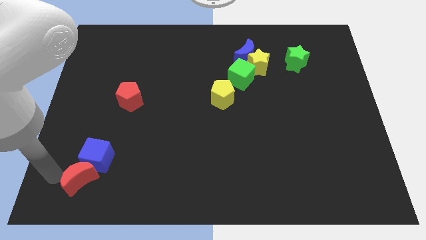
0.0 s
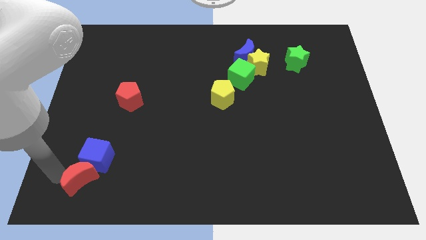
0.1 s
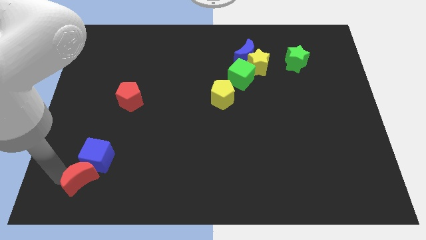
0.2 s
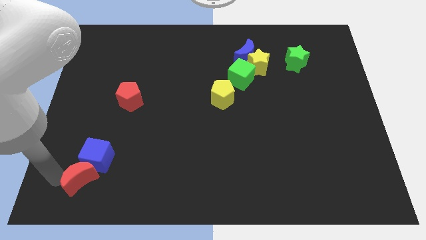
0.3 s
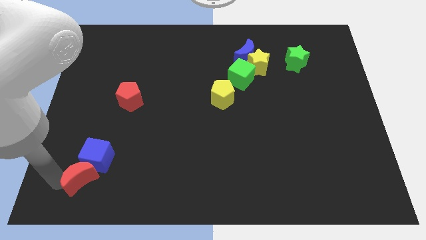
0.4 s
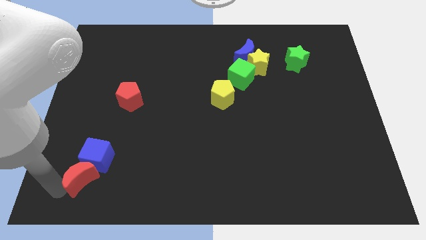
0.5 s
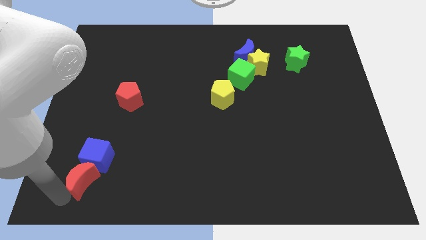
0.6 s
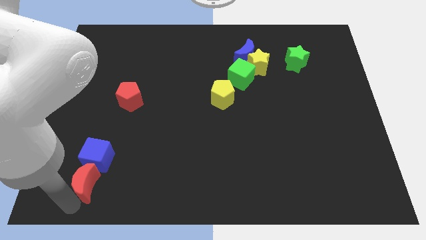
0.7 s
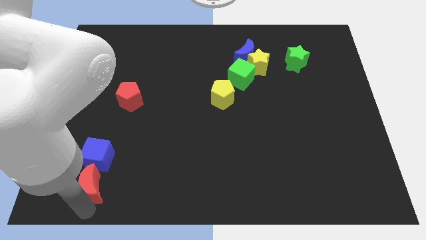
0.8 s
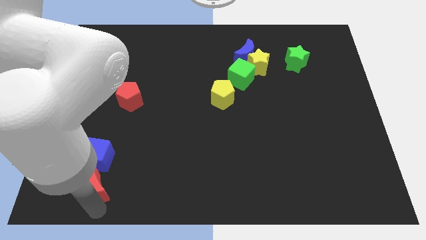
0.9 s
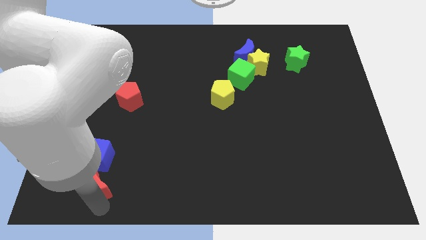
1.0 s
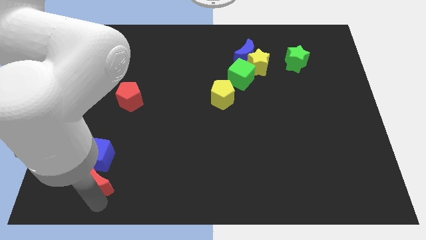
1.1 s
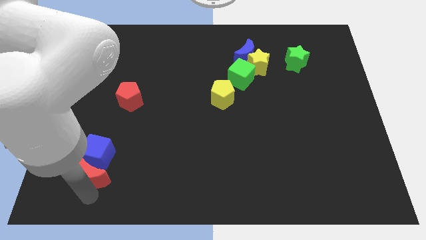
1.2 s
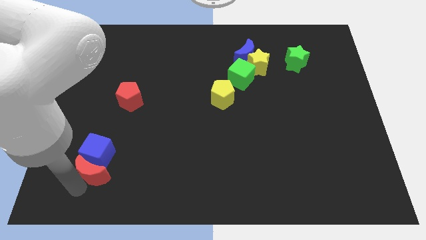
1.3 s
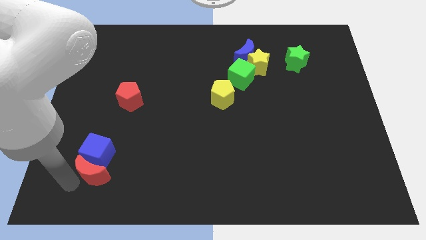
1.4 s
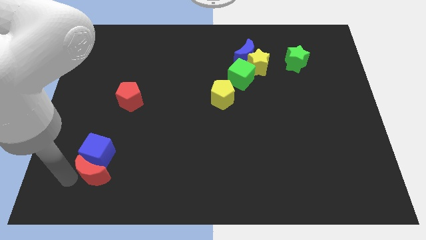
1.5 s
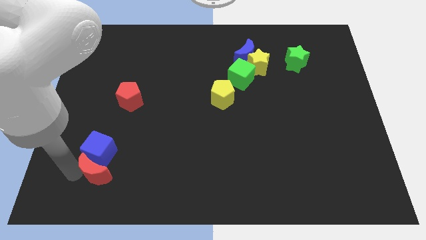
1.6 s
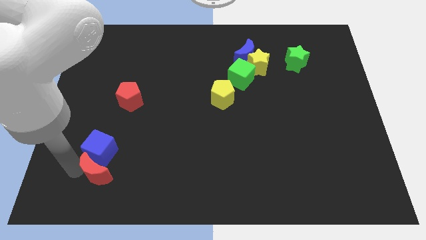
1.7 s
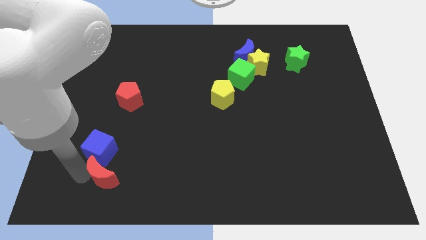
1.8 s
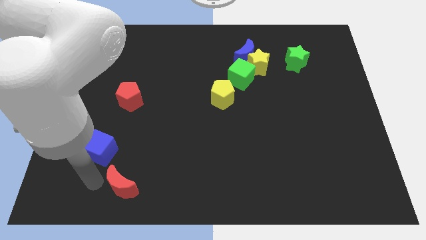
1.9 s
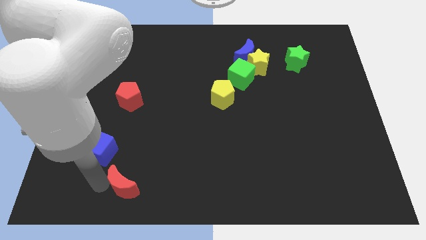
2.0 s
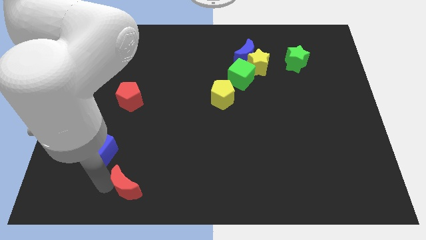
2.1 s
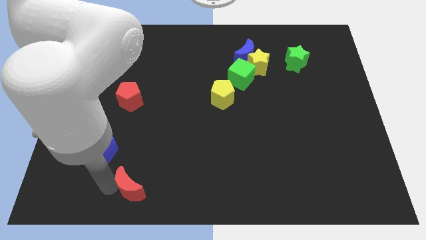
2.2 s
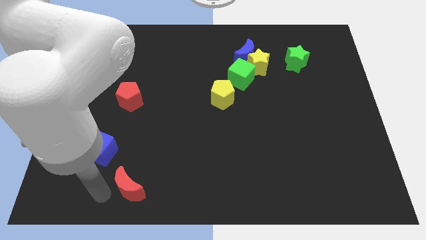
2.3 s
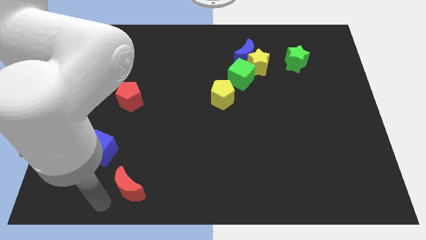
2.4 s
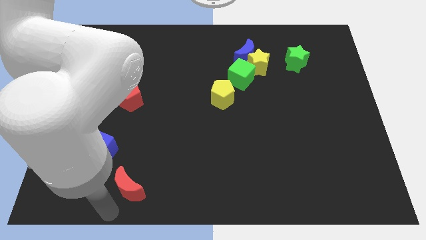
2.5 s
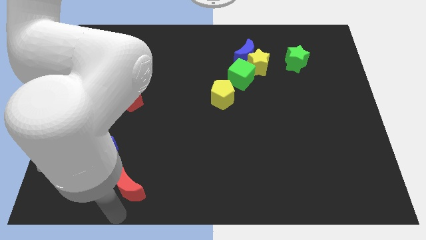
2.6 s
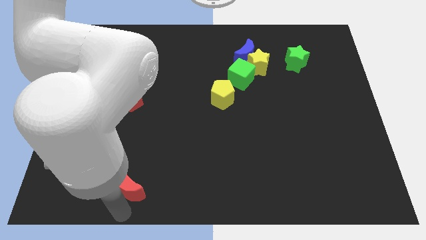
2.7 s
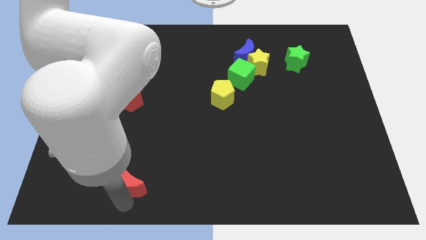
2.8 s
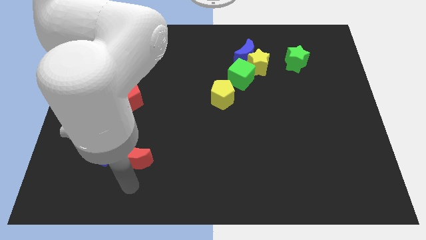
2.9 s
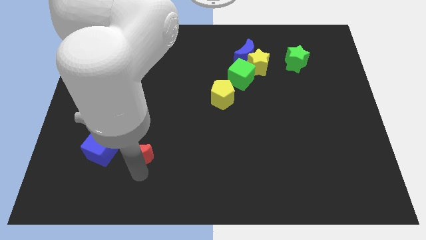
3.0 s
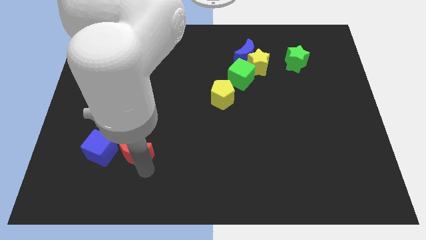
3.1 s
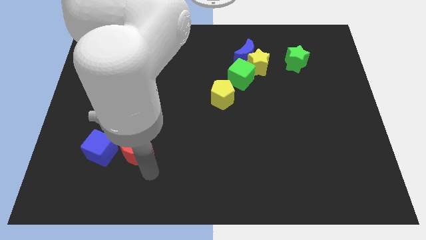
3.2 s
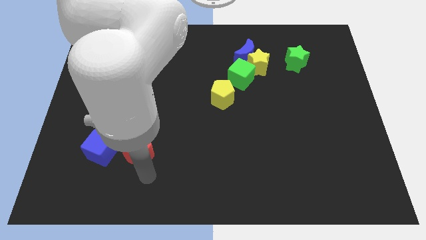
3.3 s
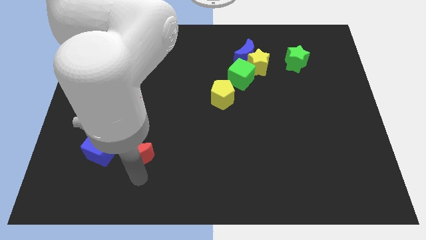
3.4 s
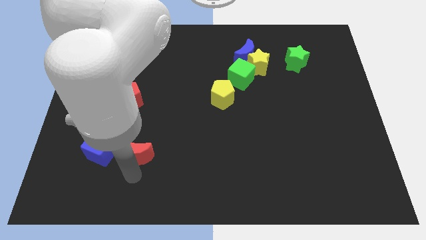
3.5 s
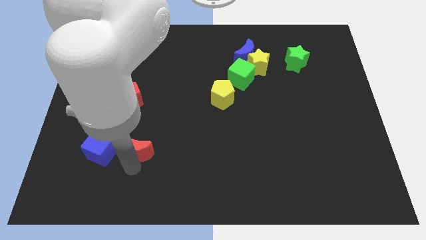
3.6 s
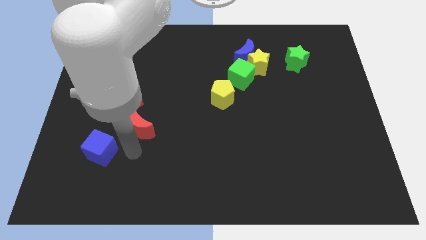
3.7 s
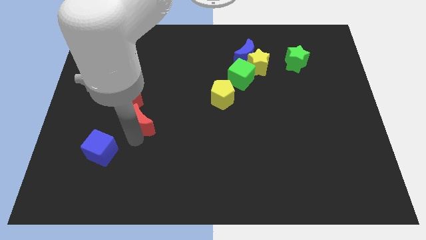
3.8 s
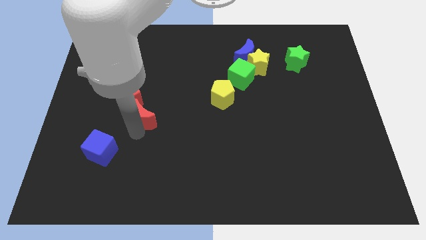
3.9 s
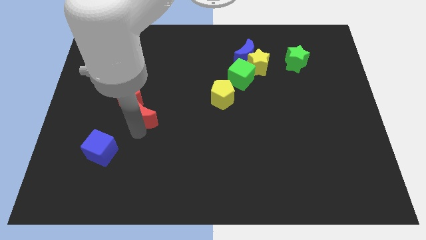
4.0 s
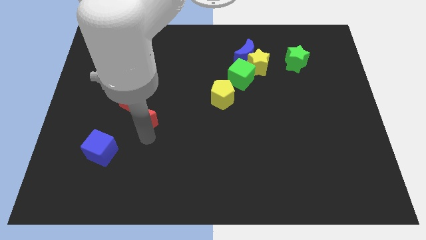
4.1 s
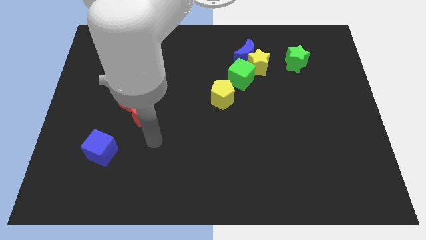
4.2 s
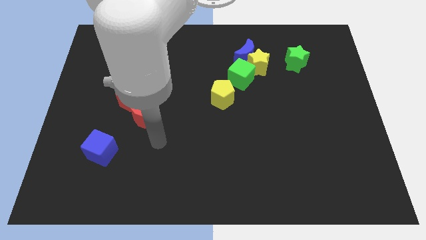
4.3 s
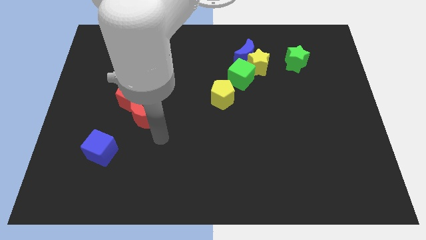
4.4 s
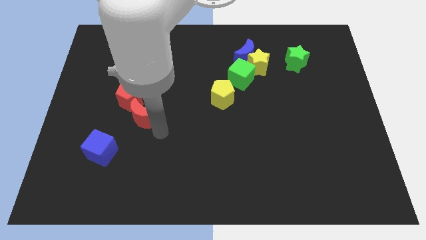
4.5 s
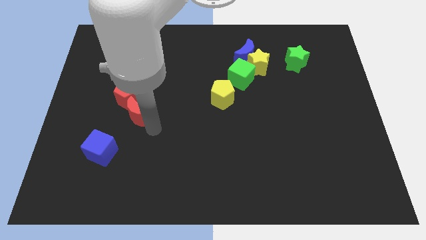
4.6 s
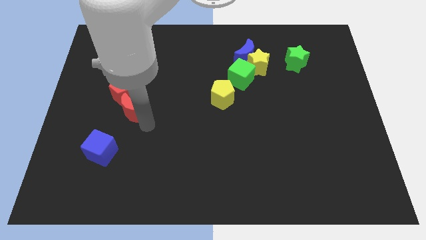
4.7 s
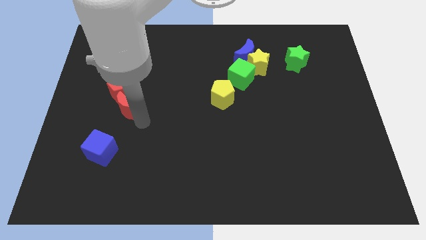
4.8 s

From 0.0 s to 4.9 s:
push the red crescent into the red pentagon

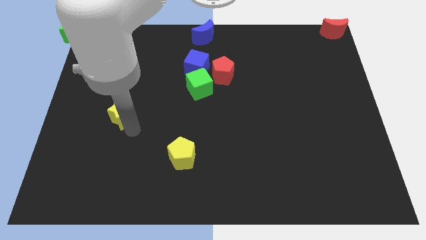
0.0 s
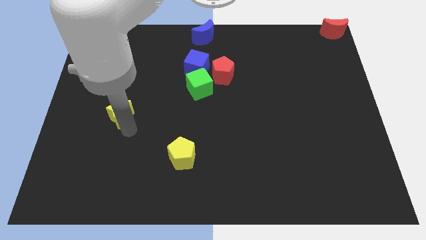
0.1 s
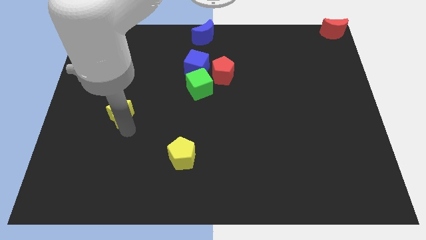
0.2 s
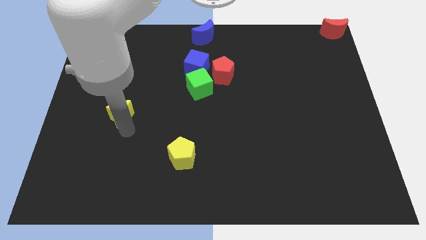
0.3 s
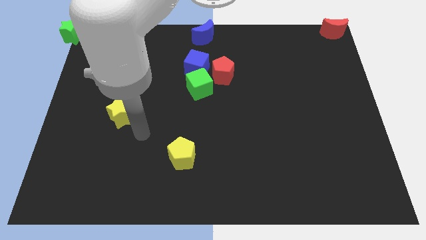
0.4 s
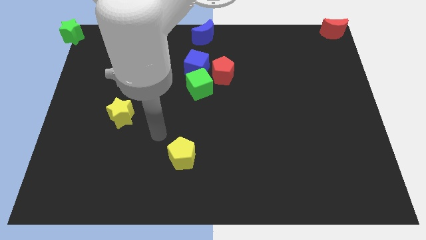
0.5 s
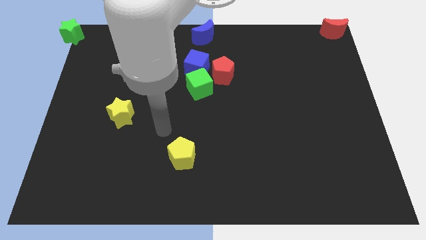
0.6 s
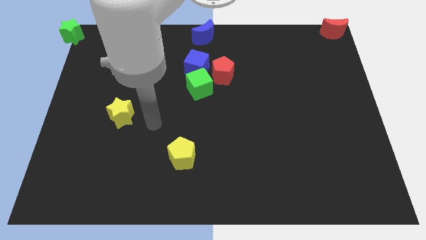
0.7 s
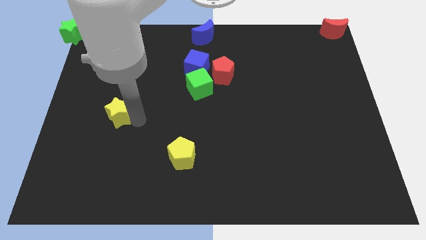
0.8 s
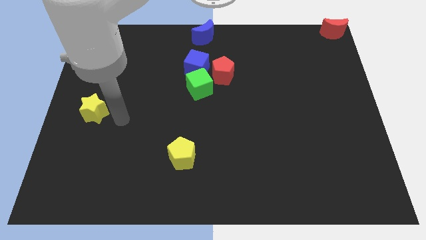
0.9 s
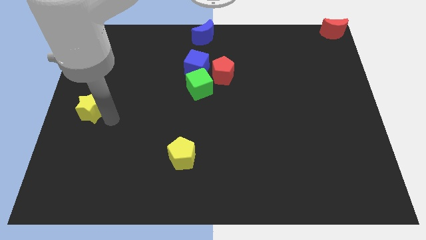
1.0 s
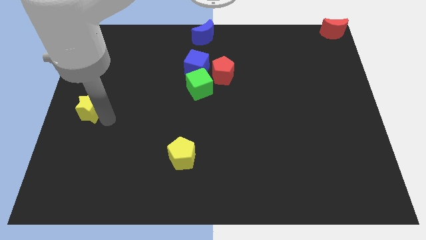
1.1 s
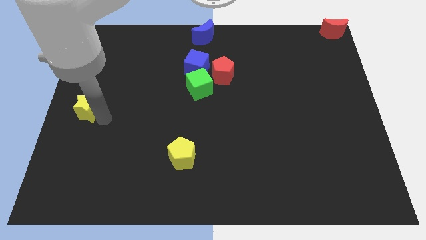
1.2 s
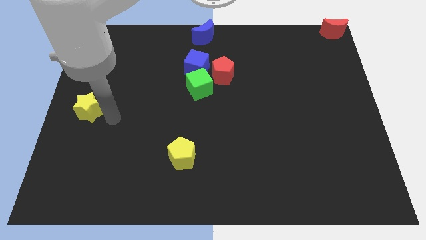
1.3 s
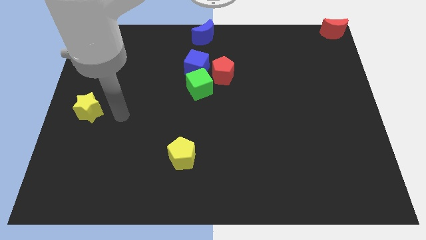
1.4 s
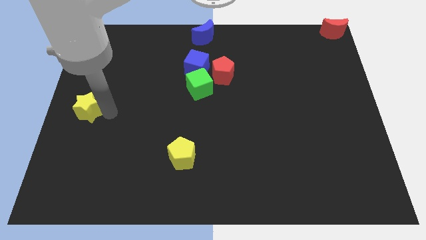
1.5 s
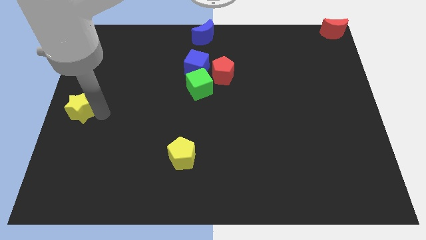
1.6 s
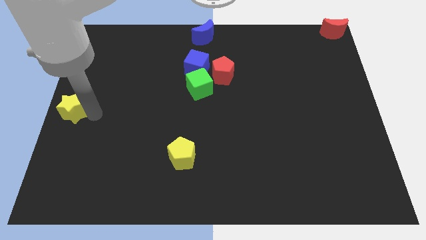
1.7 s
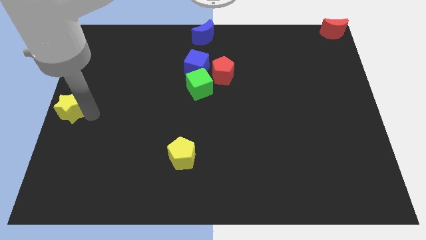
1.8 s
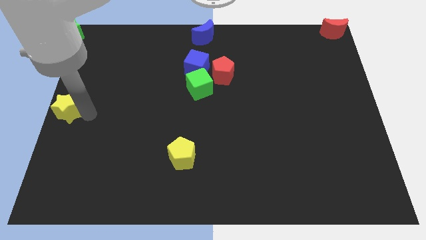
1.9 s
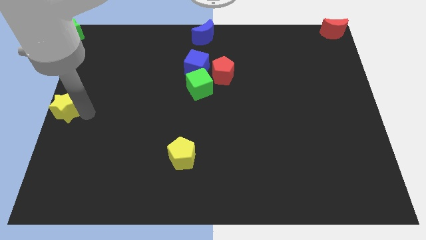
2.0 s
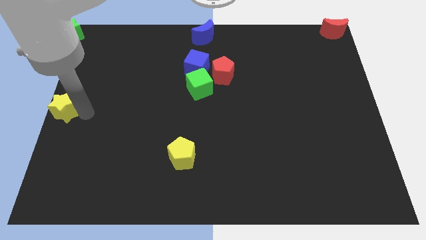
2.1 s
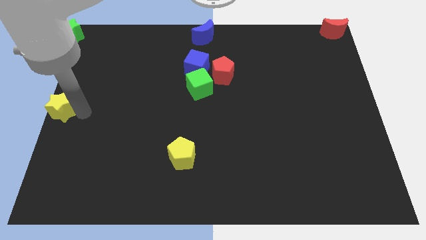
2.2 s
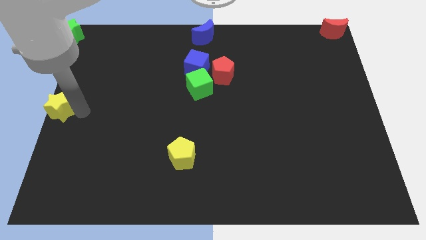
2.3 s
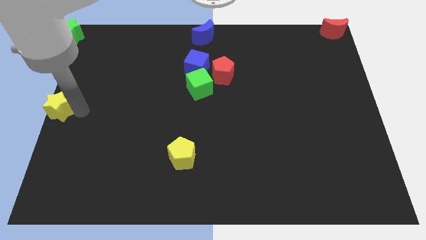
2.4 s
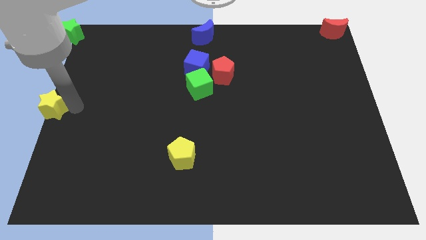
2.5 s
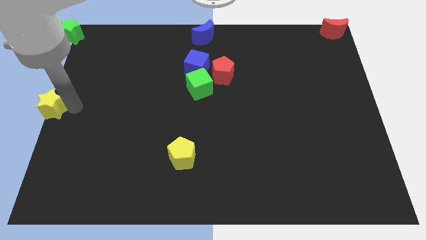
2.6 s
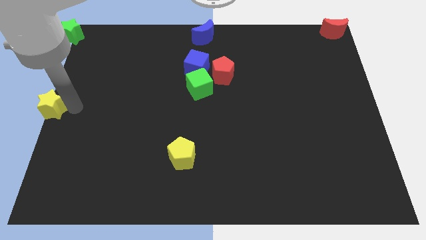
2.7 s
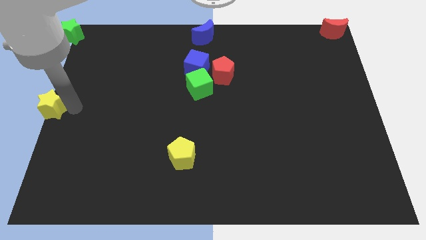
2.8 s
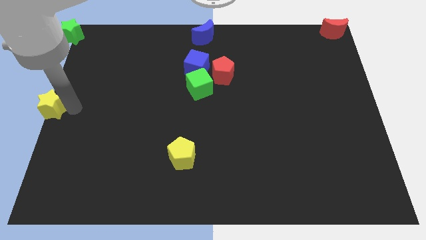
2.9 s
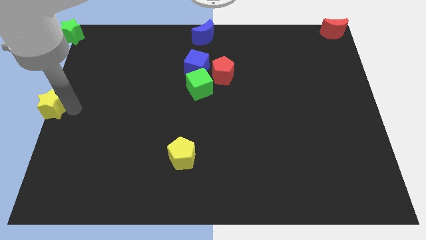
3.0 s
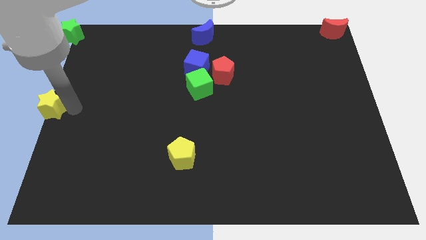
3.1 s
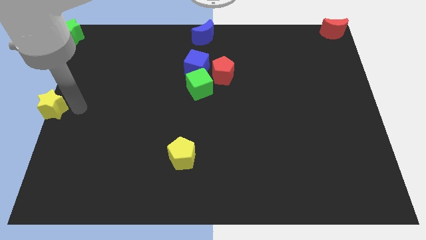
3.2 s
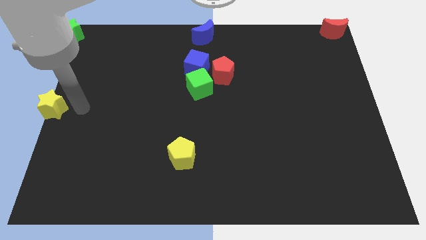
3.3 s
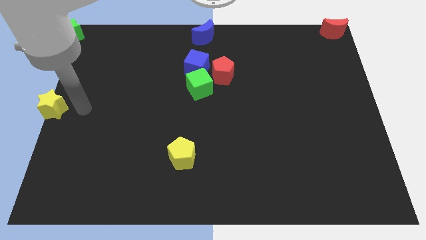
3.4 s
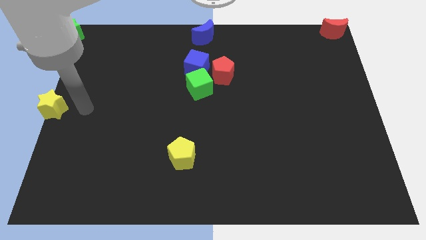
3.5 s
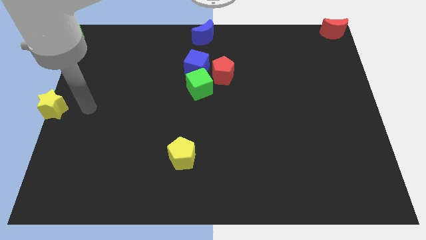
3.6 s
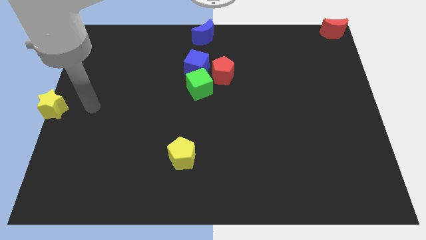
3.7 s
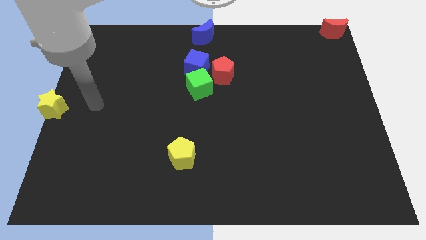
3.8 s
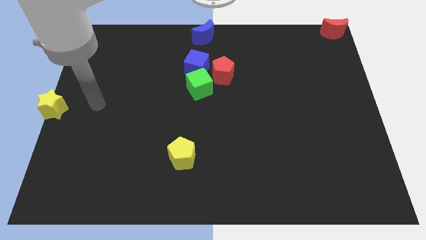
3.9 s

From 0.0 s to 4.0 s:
move the yellow star to the center left
